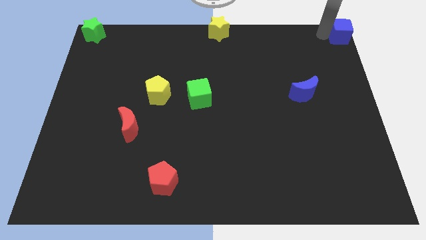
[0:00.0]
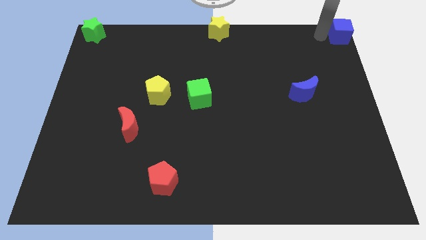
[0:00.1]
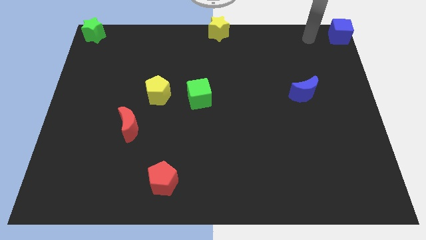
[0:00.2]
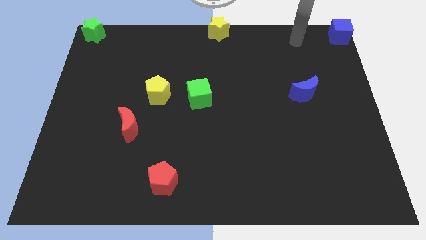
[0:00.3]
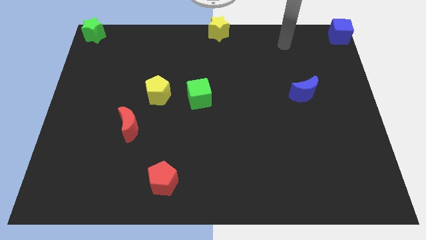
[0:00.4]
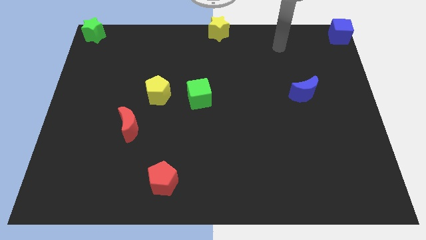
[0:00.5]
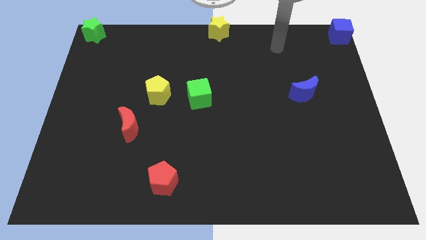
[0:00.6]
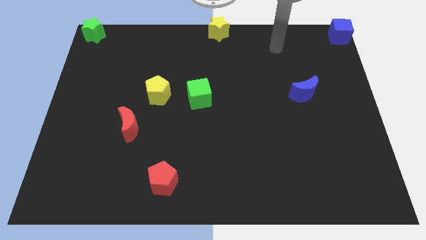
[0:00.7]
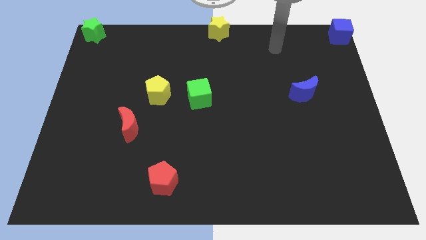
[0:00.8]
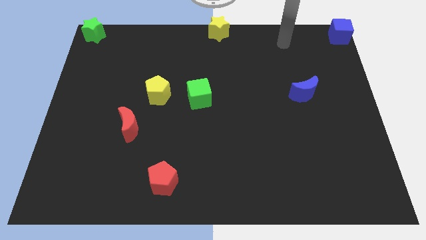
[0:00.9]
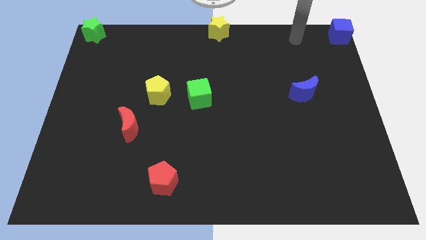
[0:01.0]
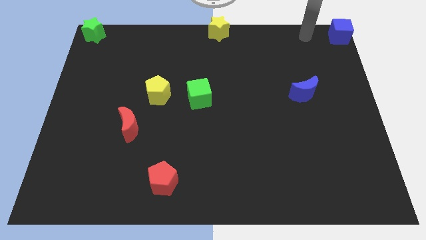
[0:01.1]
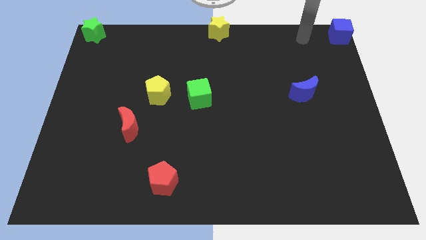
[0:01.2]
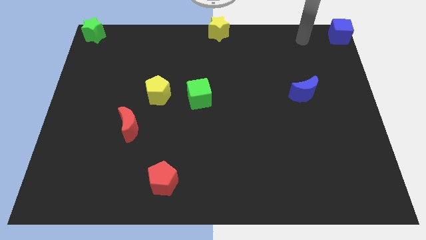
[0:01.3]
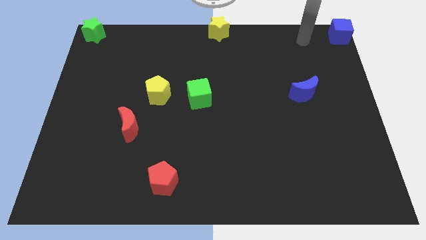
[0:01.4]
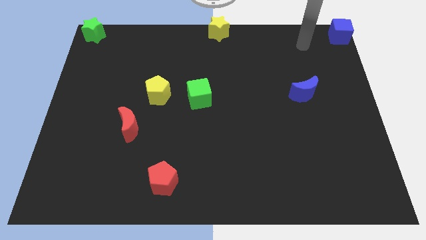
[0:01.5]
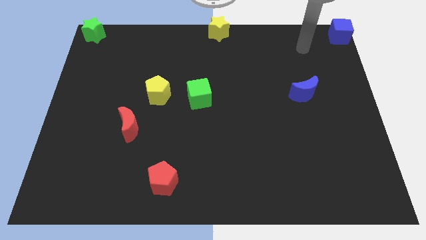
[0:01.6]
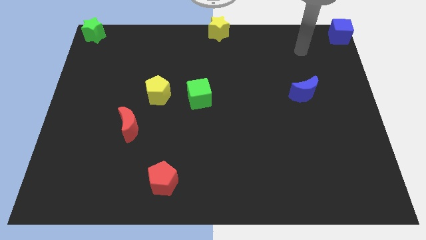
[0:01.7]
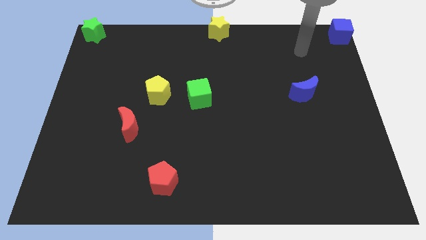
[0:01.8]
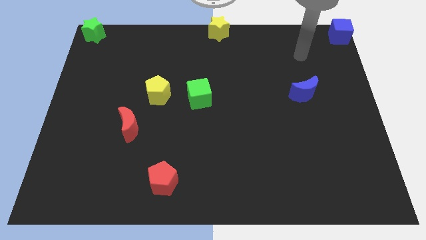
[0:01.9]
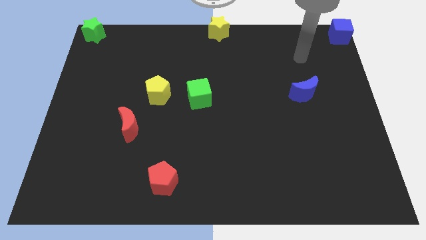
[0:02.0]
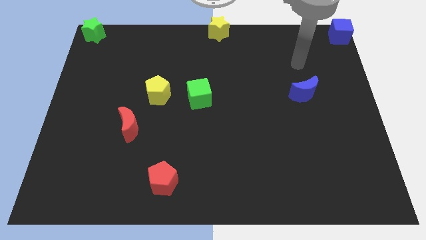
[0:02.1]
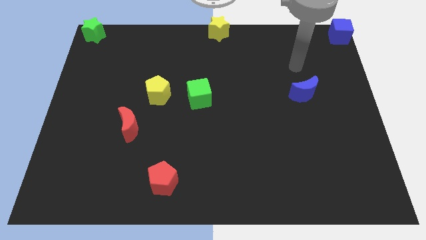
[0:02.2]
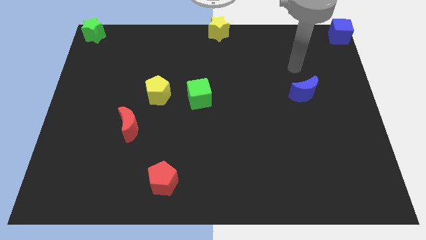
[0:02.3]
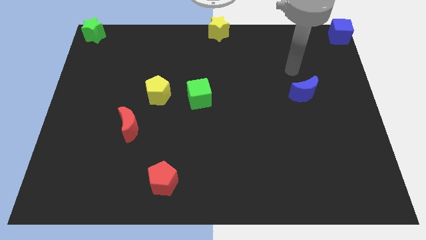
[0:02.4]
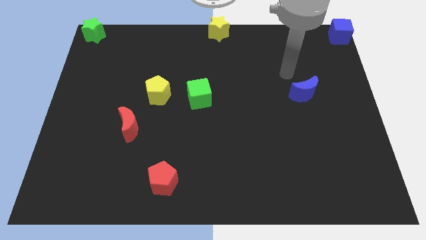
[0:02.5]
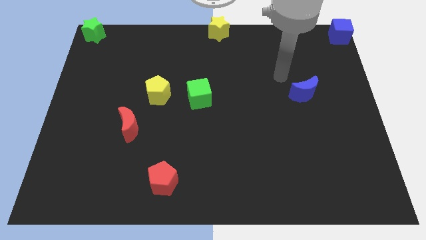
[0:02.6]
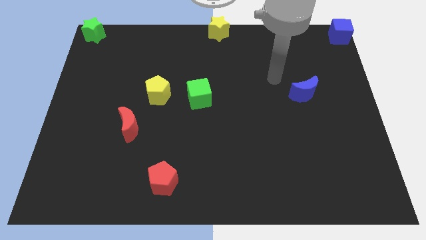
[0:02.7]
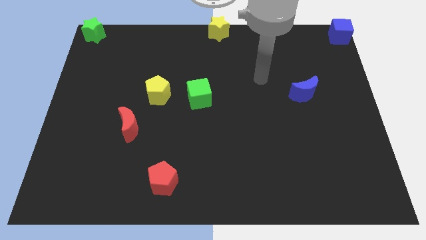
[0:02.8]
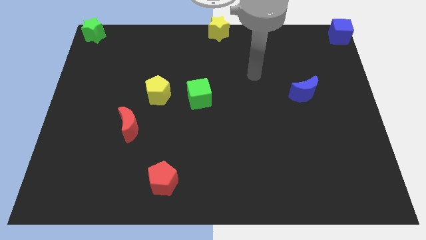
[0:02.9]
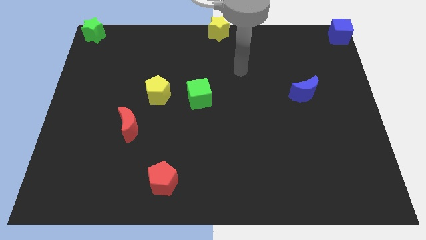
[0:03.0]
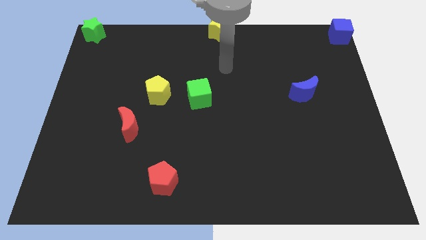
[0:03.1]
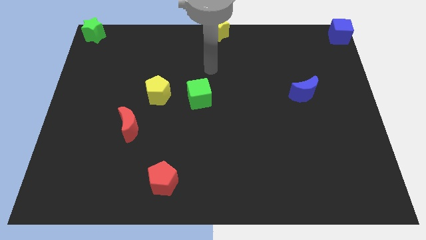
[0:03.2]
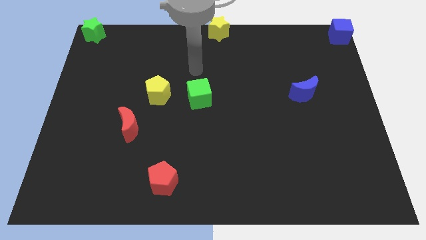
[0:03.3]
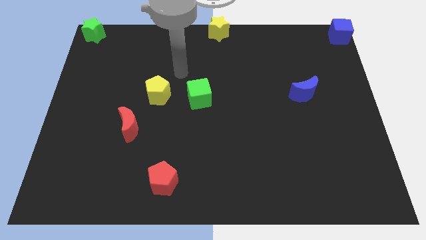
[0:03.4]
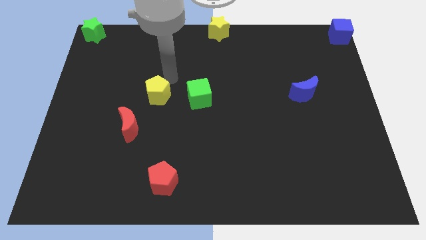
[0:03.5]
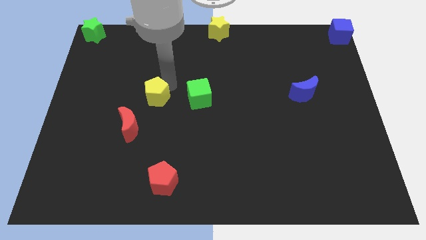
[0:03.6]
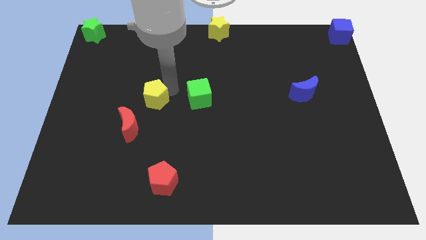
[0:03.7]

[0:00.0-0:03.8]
move your arm to the top of the yellow pentagon

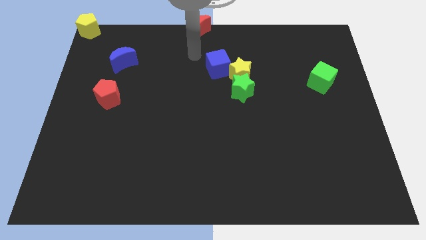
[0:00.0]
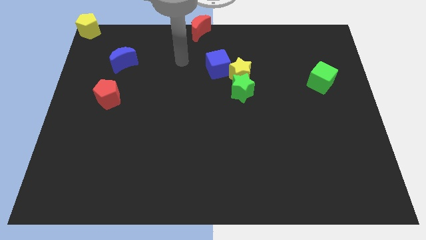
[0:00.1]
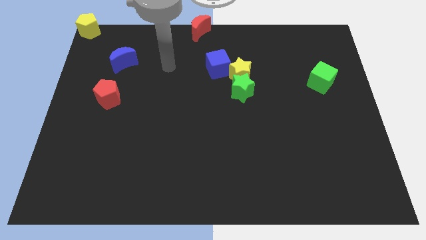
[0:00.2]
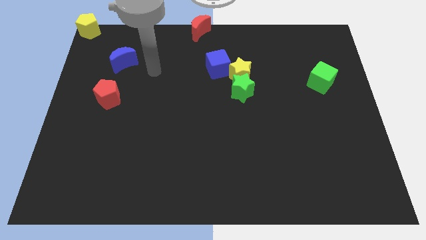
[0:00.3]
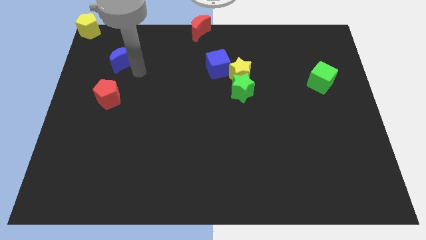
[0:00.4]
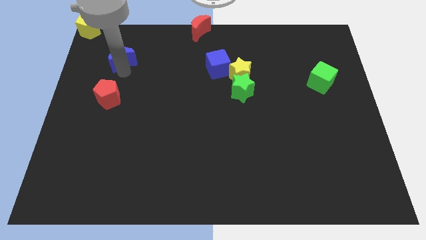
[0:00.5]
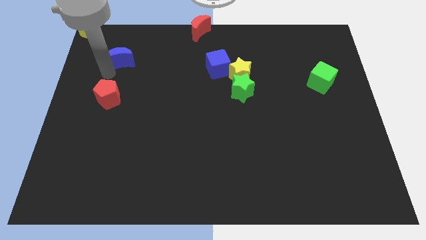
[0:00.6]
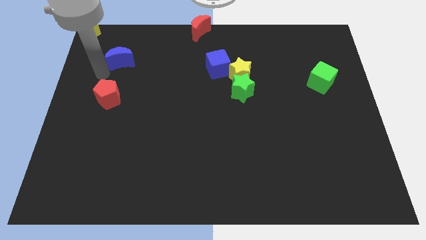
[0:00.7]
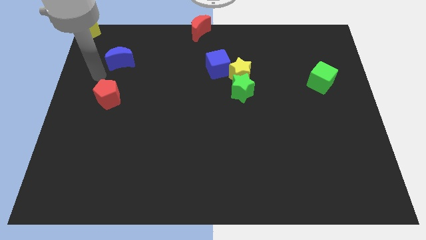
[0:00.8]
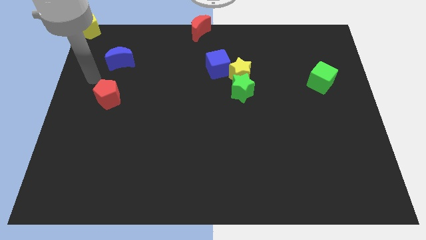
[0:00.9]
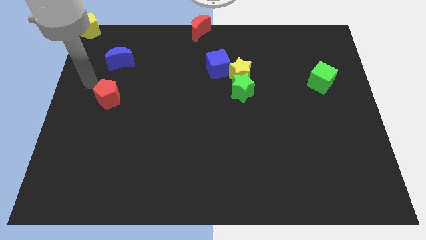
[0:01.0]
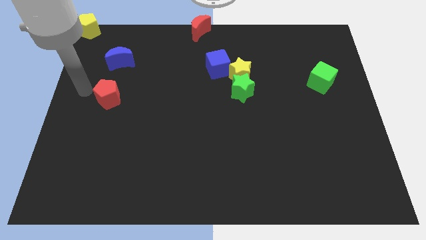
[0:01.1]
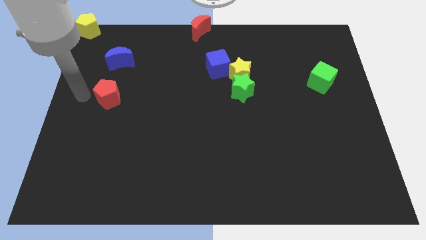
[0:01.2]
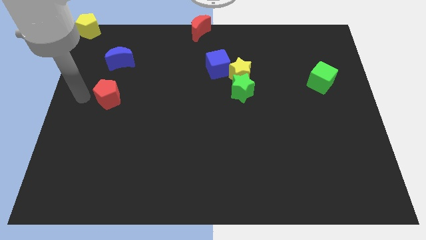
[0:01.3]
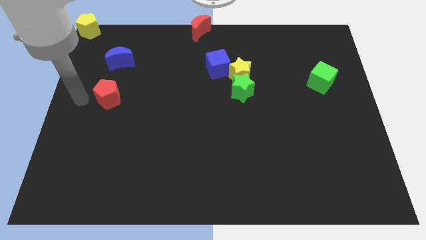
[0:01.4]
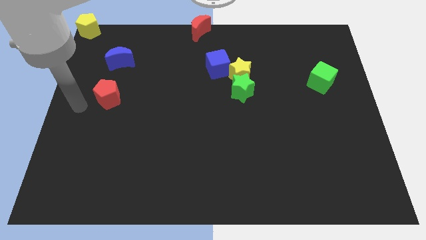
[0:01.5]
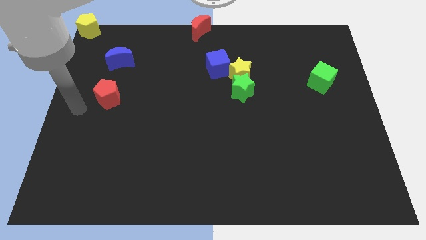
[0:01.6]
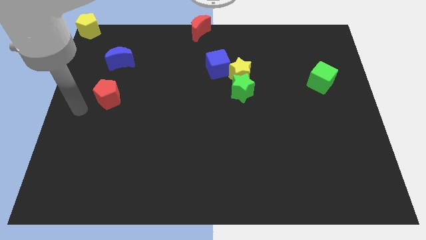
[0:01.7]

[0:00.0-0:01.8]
move your arm to the left of red pentagon

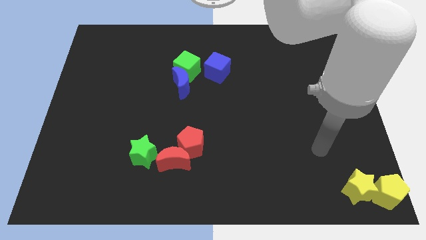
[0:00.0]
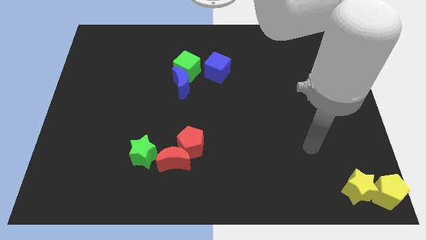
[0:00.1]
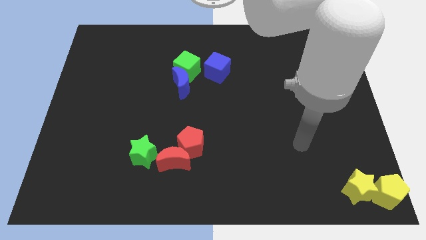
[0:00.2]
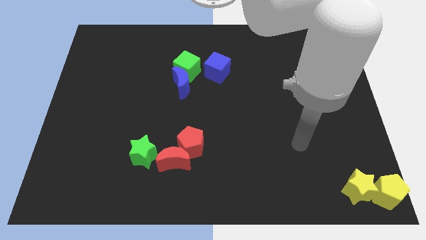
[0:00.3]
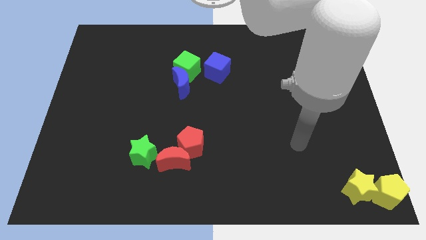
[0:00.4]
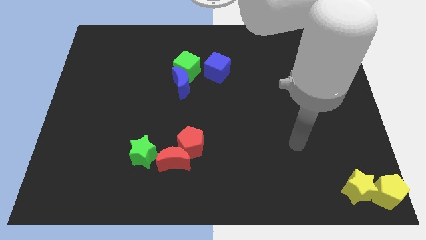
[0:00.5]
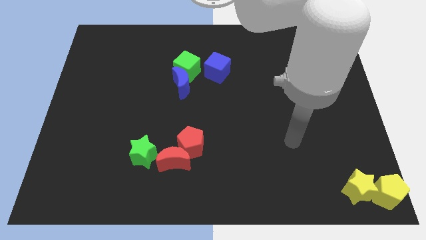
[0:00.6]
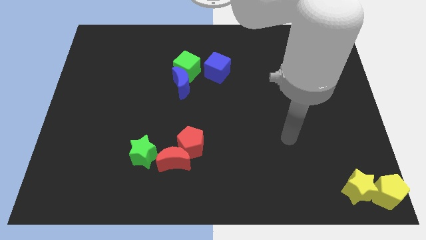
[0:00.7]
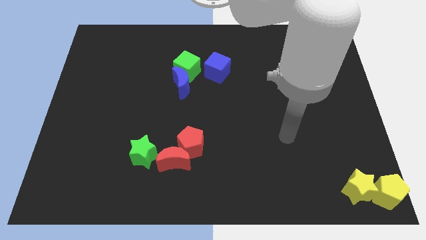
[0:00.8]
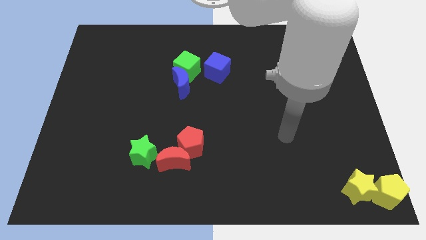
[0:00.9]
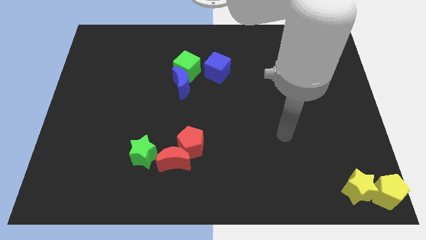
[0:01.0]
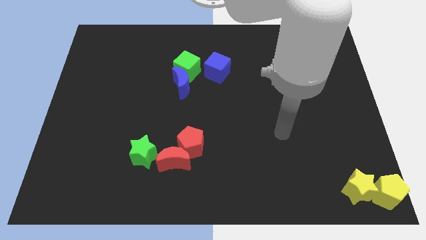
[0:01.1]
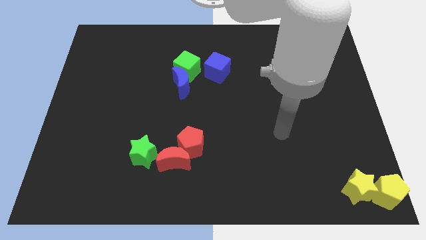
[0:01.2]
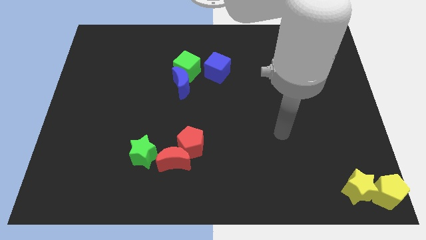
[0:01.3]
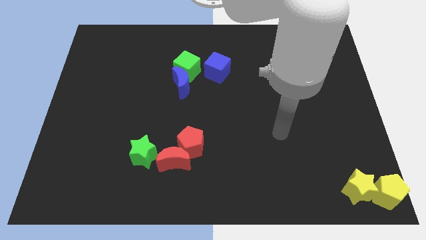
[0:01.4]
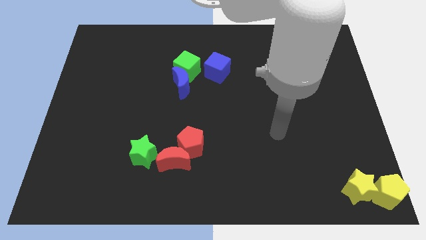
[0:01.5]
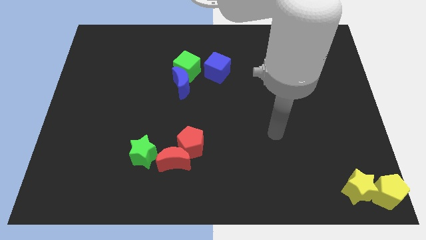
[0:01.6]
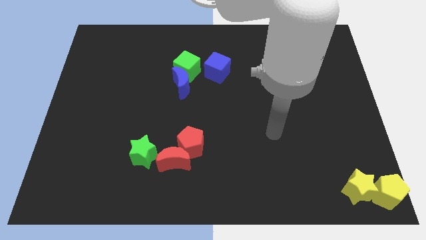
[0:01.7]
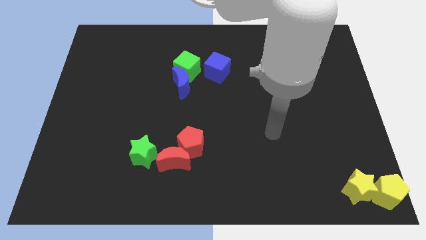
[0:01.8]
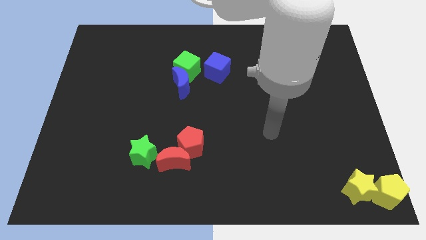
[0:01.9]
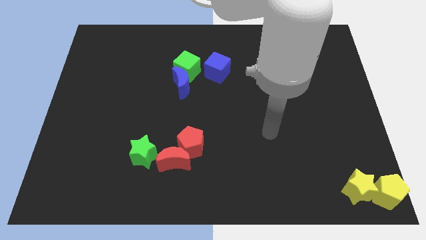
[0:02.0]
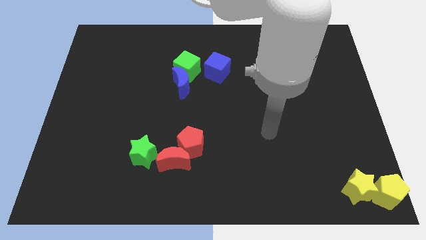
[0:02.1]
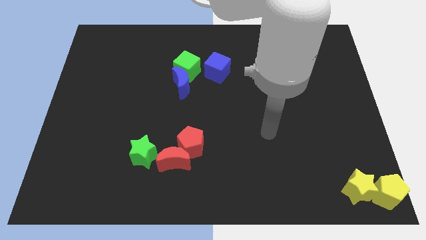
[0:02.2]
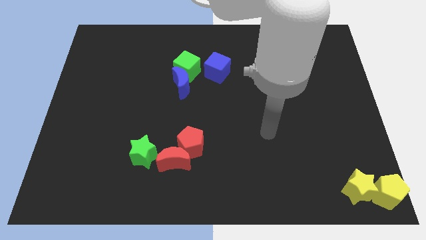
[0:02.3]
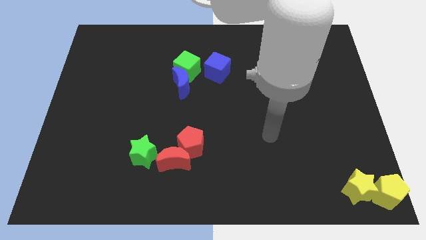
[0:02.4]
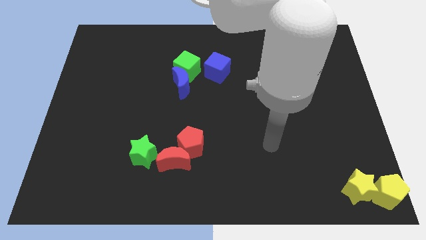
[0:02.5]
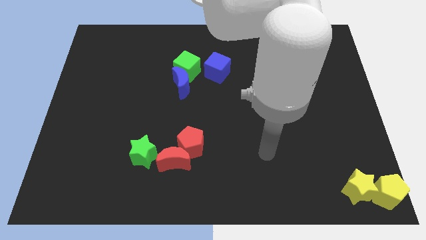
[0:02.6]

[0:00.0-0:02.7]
move your hand towards the red pentagon

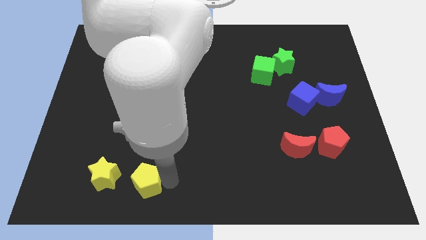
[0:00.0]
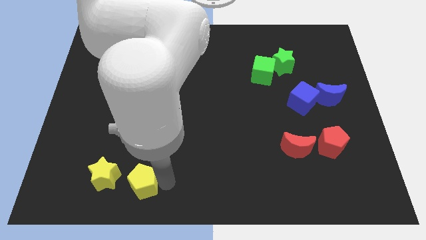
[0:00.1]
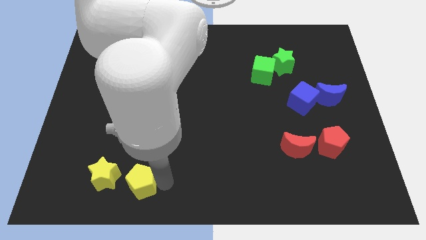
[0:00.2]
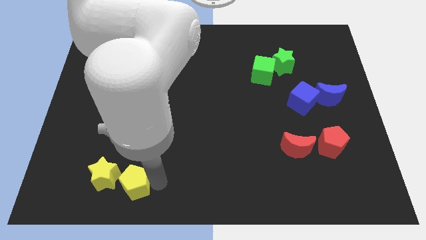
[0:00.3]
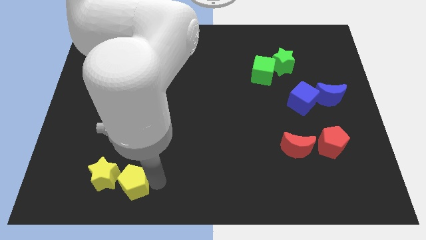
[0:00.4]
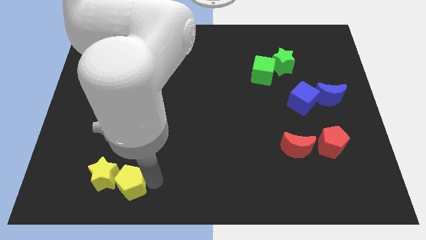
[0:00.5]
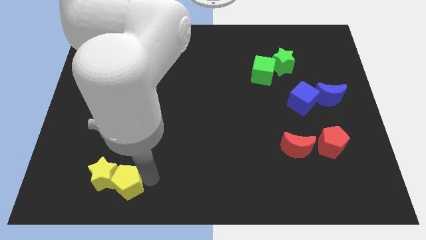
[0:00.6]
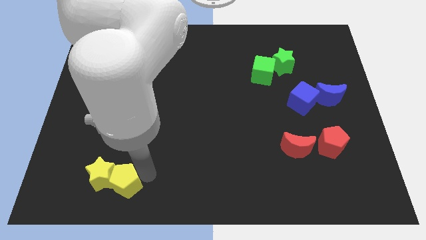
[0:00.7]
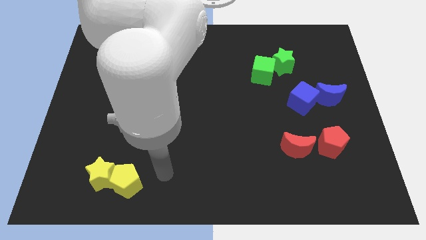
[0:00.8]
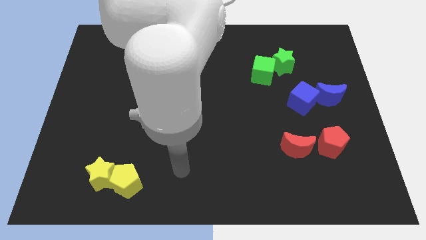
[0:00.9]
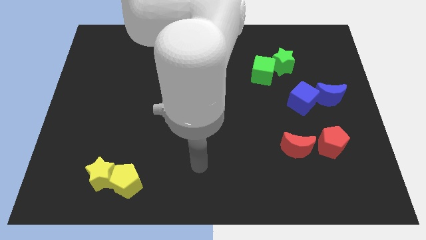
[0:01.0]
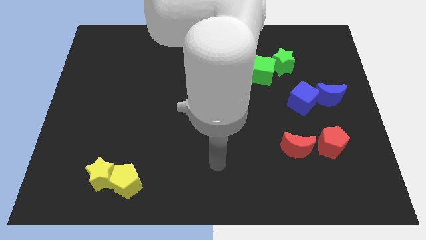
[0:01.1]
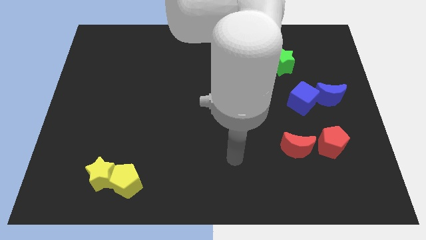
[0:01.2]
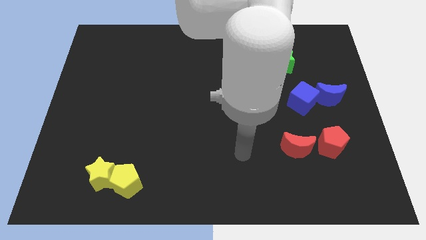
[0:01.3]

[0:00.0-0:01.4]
drag the yellow pentagon into the yellow star
